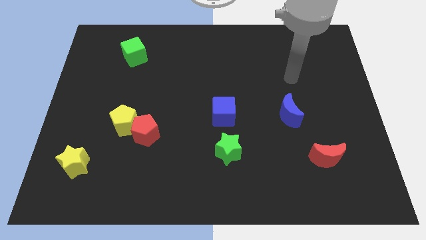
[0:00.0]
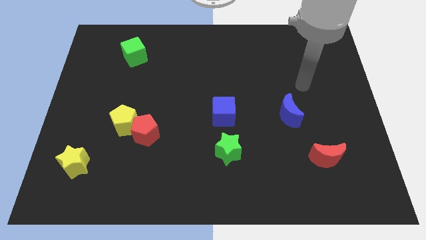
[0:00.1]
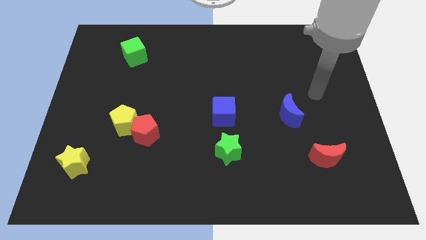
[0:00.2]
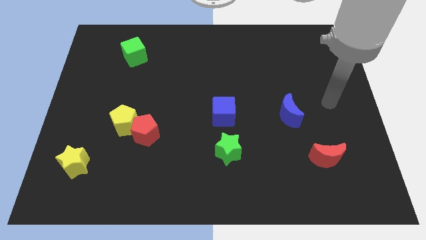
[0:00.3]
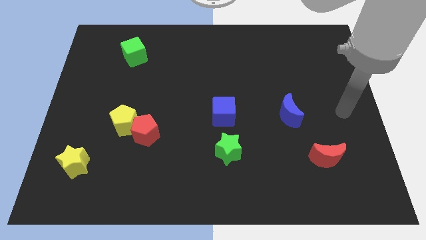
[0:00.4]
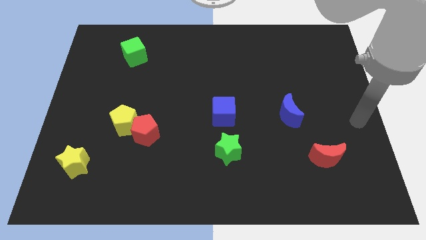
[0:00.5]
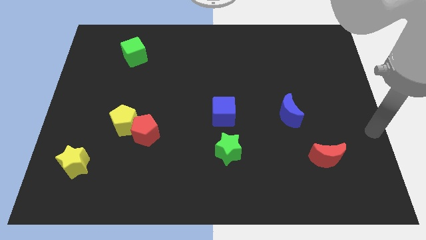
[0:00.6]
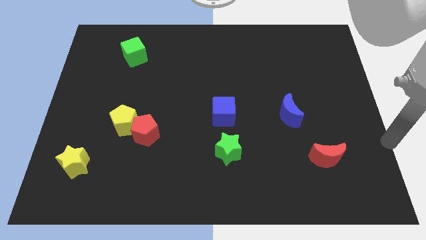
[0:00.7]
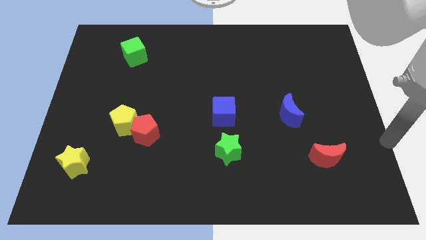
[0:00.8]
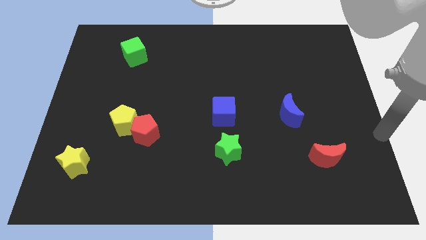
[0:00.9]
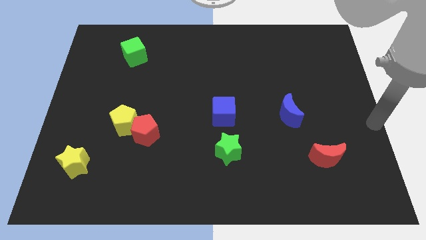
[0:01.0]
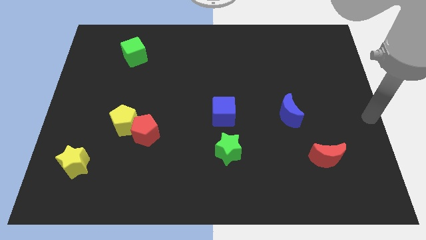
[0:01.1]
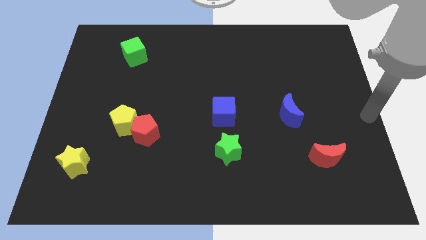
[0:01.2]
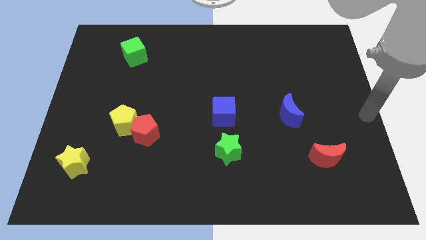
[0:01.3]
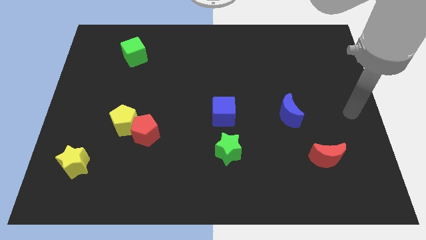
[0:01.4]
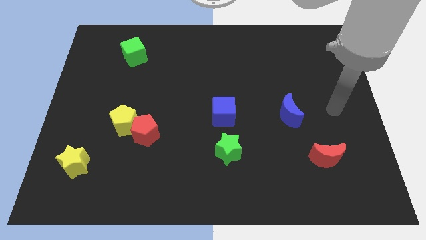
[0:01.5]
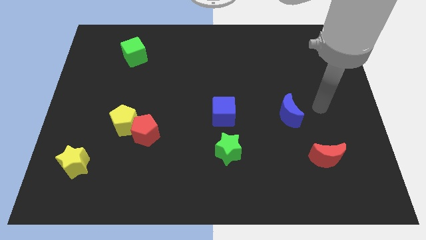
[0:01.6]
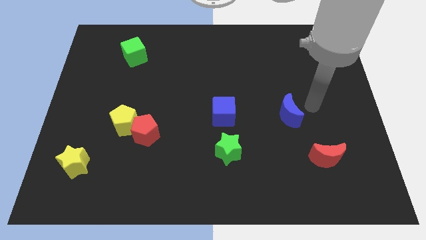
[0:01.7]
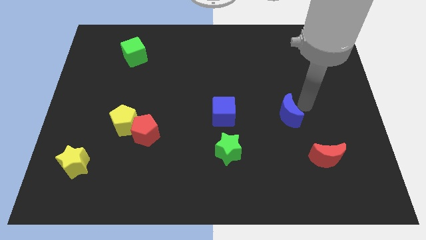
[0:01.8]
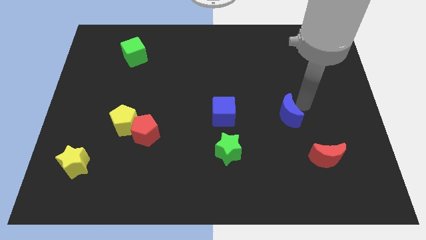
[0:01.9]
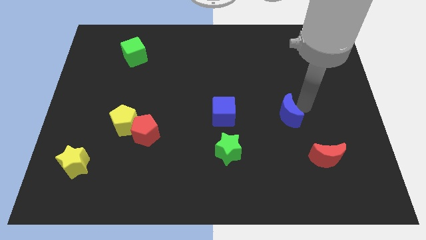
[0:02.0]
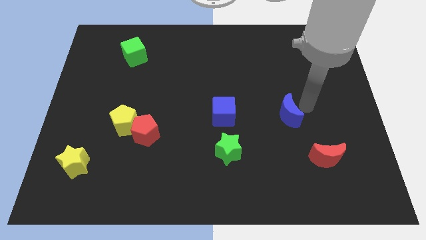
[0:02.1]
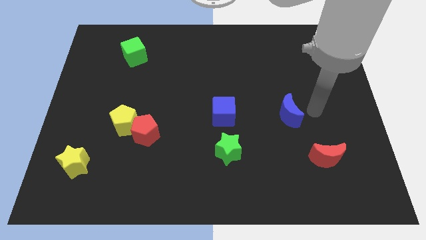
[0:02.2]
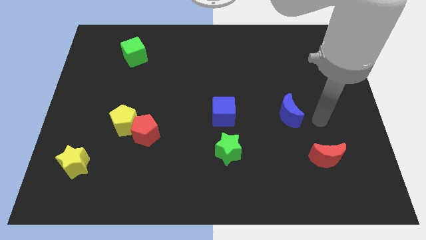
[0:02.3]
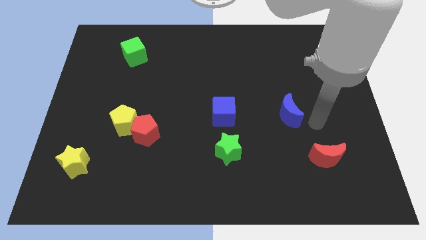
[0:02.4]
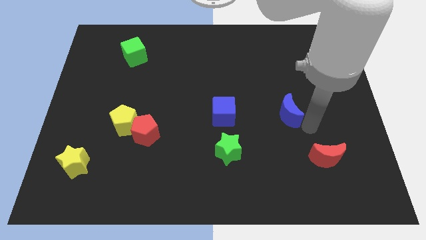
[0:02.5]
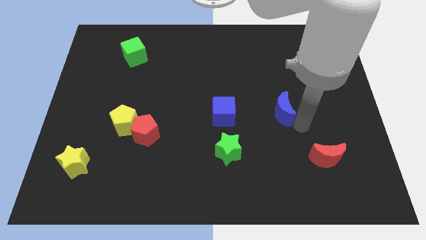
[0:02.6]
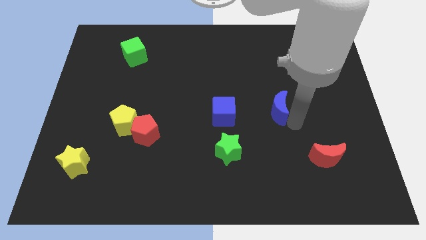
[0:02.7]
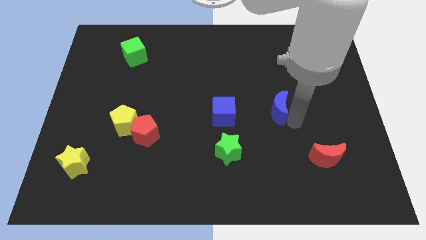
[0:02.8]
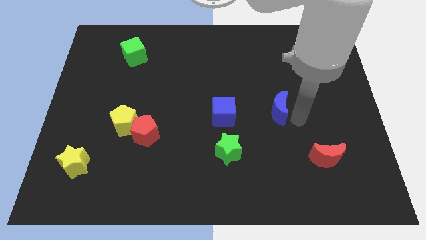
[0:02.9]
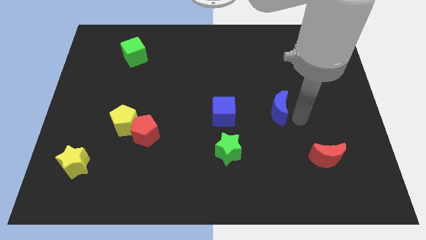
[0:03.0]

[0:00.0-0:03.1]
place your arm to the bottom right side of the blue moon

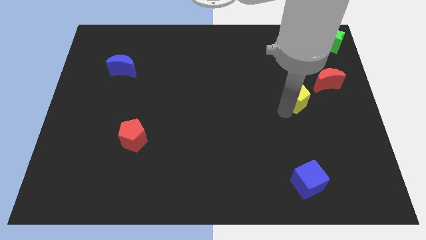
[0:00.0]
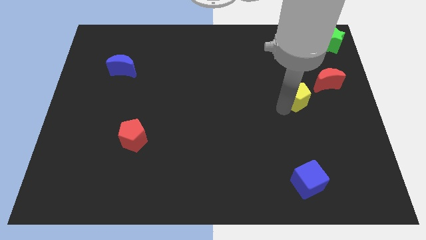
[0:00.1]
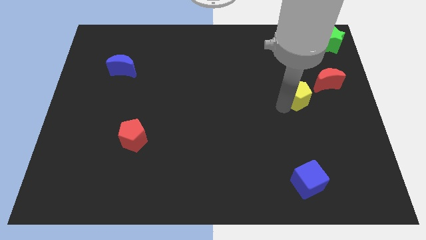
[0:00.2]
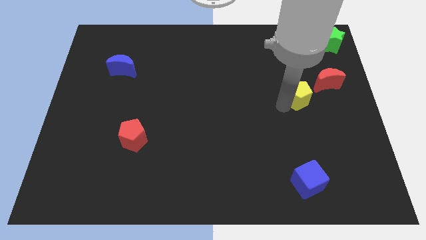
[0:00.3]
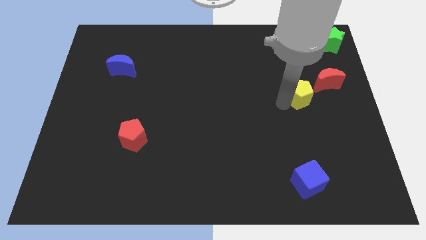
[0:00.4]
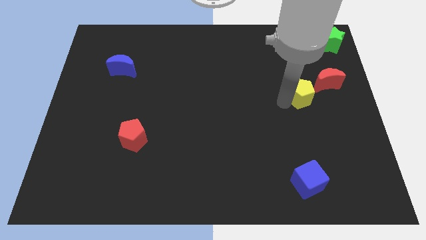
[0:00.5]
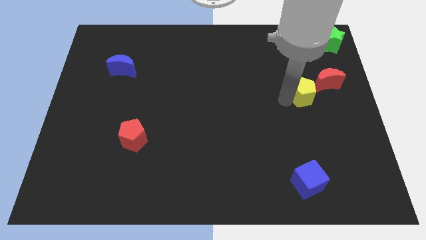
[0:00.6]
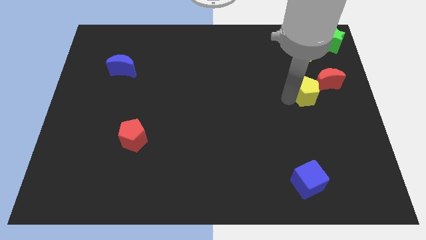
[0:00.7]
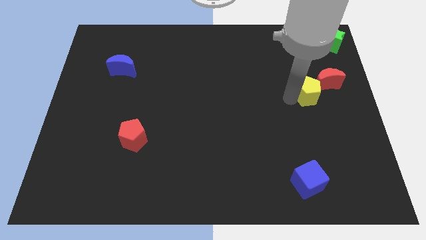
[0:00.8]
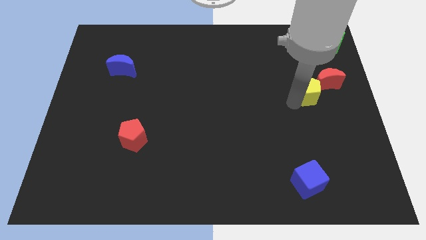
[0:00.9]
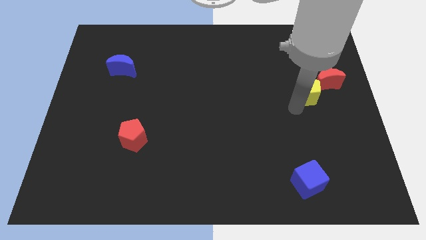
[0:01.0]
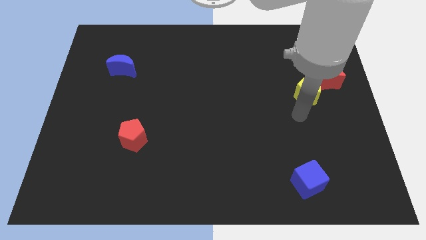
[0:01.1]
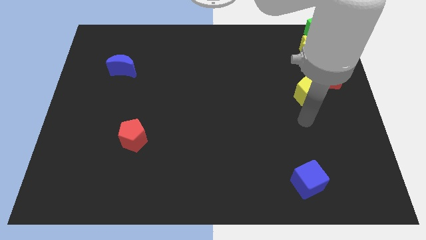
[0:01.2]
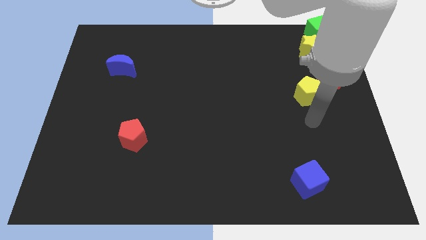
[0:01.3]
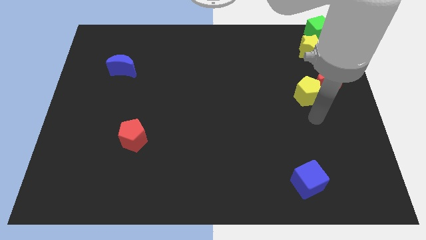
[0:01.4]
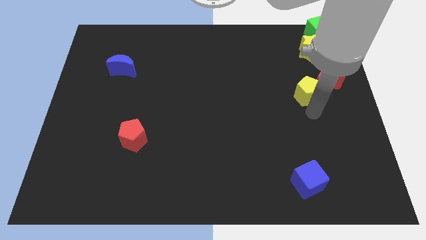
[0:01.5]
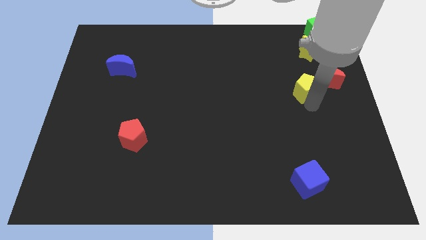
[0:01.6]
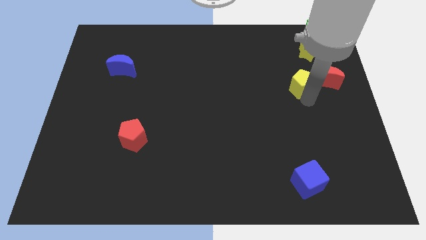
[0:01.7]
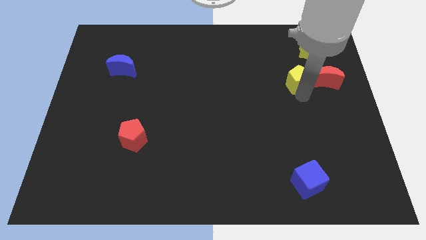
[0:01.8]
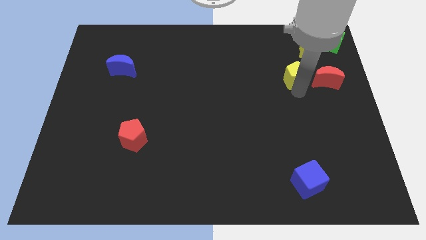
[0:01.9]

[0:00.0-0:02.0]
push the yellow pentagon to the left side of red crescent

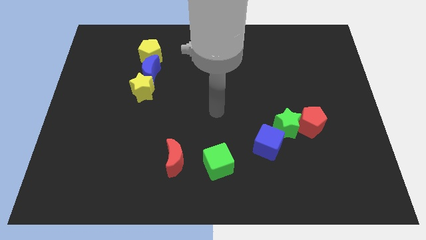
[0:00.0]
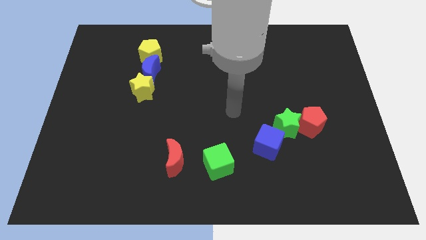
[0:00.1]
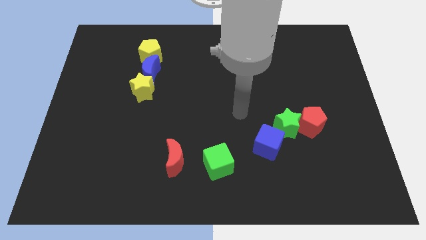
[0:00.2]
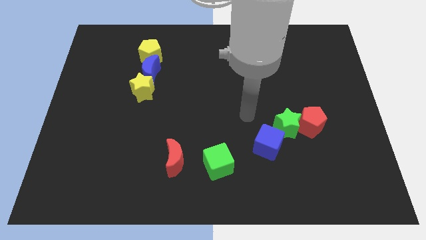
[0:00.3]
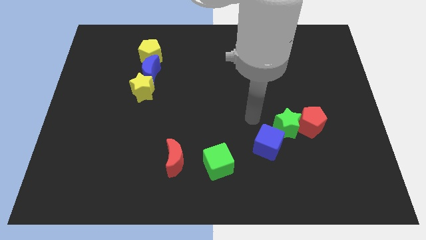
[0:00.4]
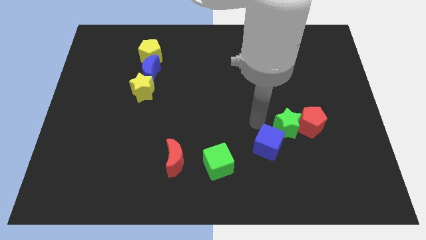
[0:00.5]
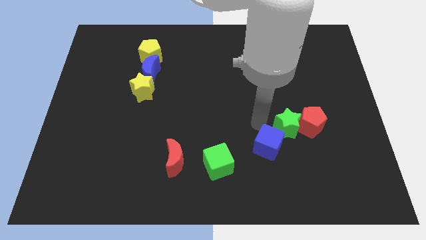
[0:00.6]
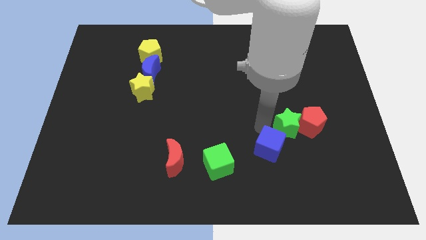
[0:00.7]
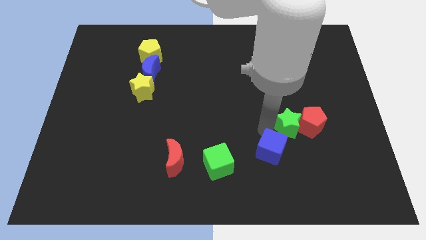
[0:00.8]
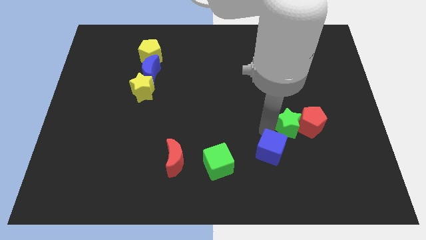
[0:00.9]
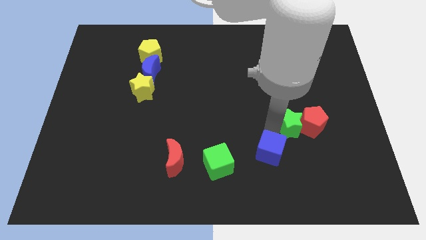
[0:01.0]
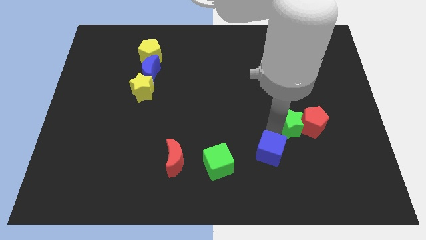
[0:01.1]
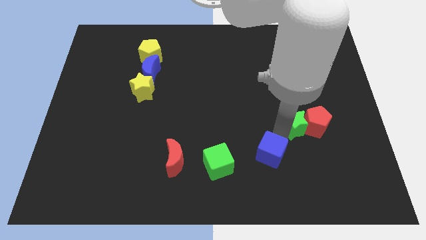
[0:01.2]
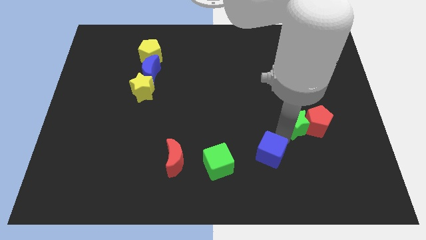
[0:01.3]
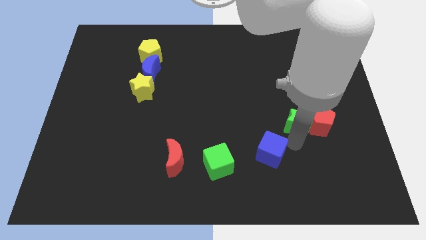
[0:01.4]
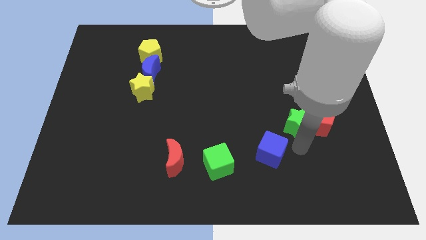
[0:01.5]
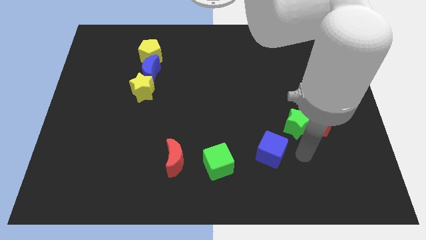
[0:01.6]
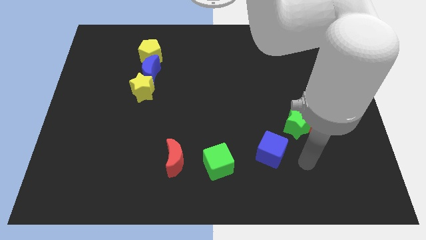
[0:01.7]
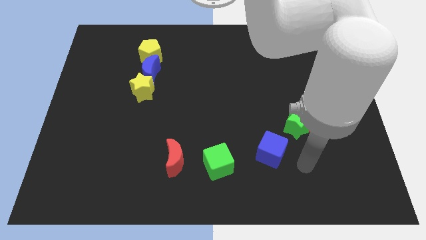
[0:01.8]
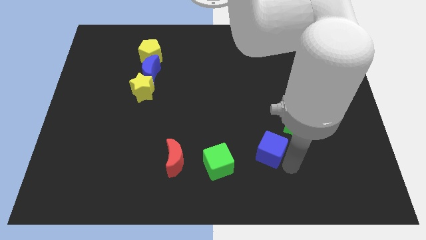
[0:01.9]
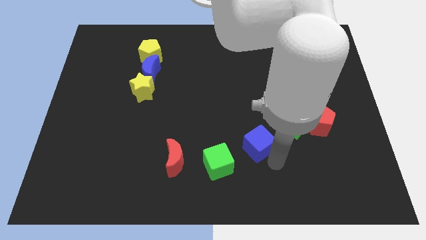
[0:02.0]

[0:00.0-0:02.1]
separate the green star and the blue cube

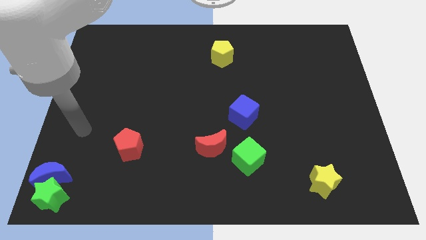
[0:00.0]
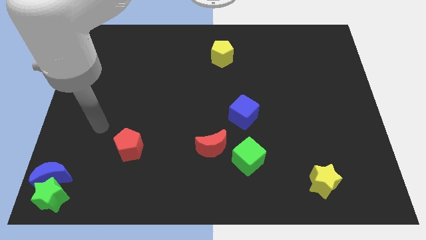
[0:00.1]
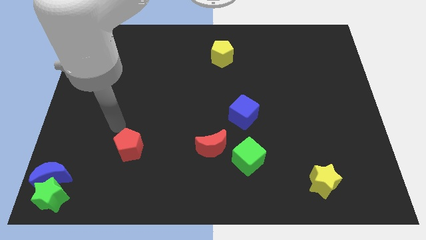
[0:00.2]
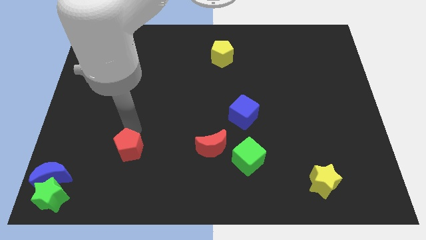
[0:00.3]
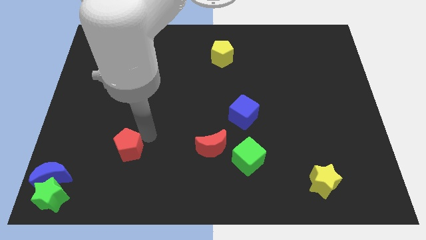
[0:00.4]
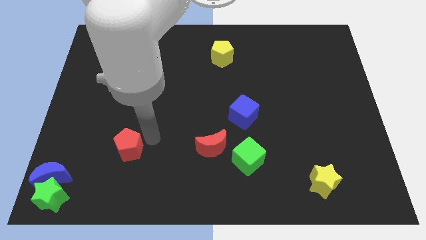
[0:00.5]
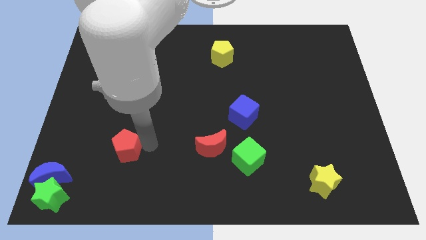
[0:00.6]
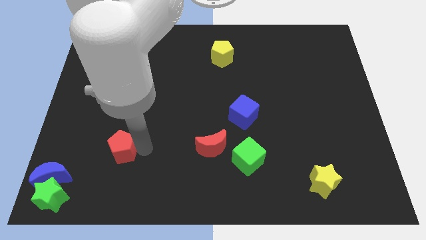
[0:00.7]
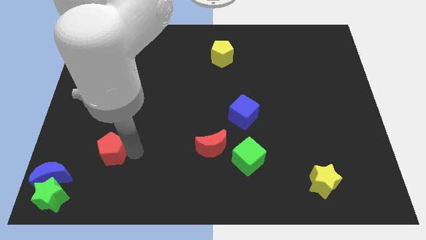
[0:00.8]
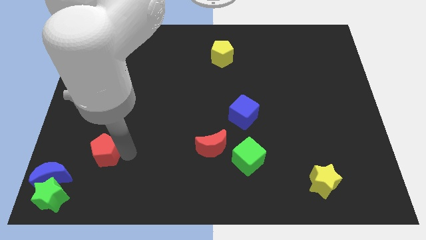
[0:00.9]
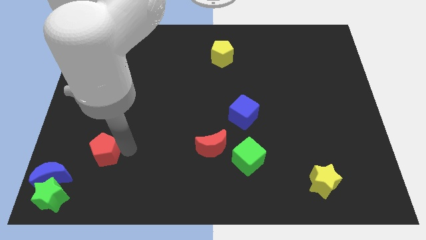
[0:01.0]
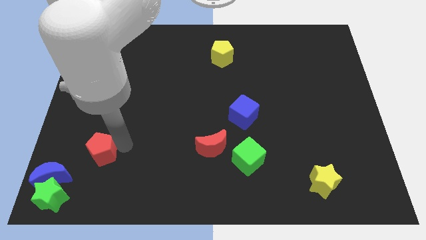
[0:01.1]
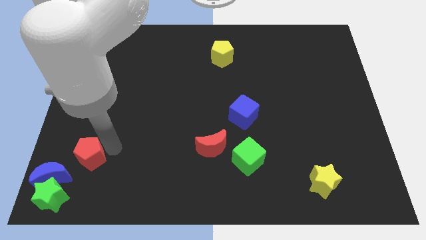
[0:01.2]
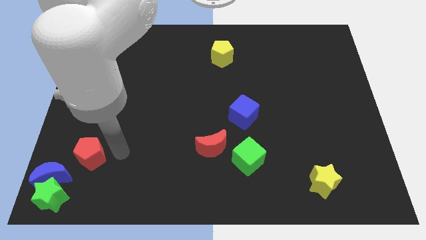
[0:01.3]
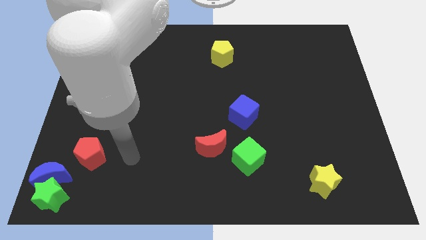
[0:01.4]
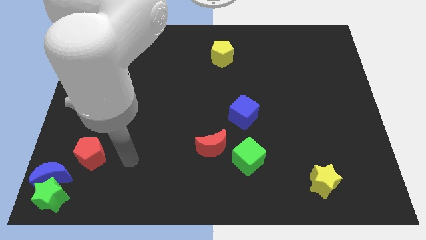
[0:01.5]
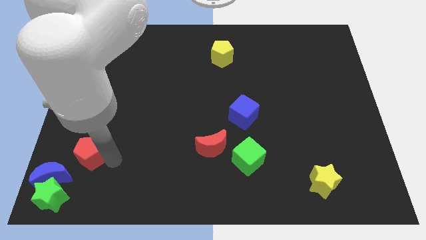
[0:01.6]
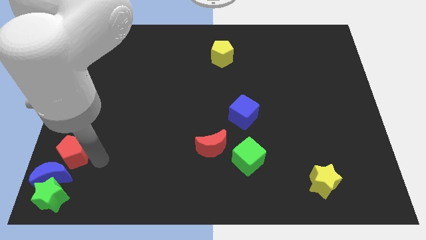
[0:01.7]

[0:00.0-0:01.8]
push the red pentagon close to the blue moon
